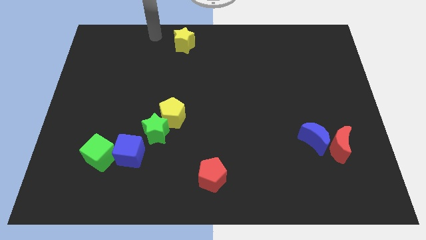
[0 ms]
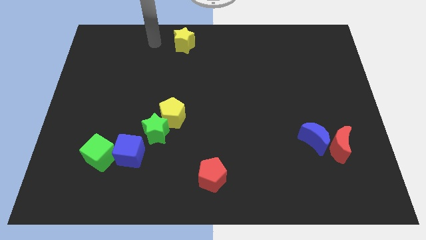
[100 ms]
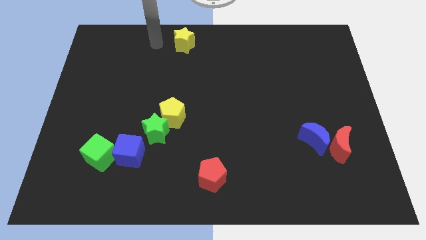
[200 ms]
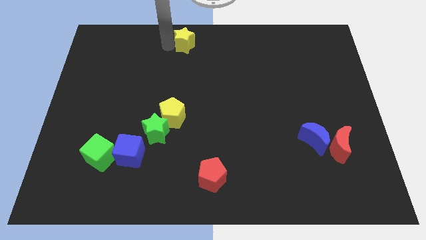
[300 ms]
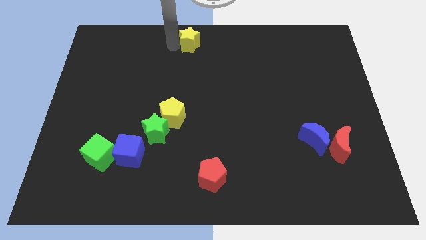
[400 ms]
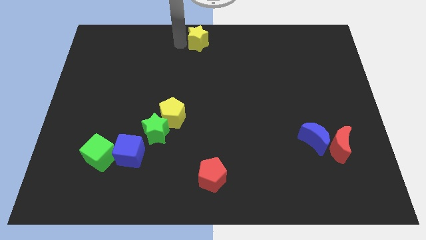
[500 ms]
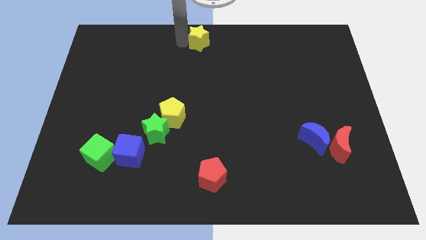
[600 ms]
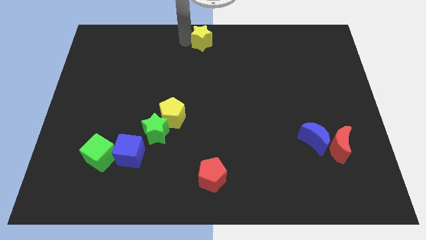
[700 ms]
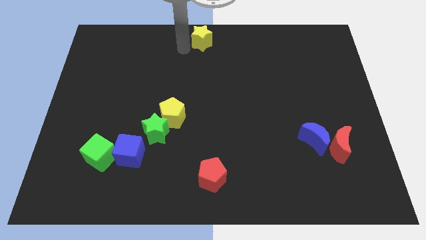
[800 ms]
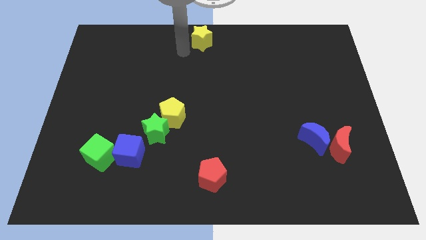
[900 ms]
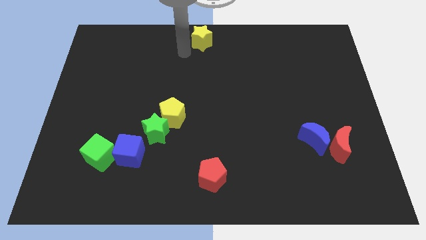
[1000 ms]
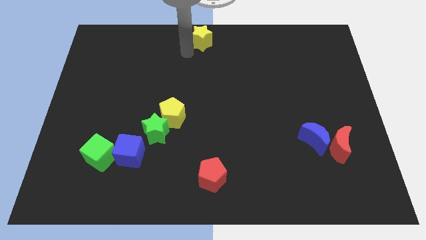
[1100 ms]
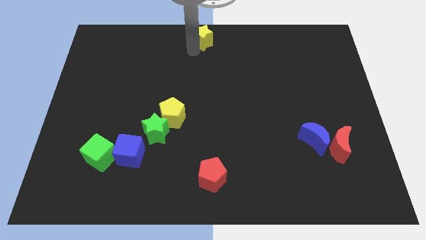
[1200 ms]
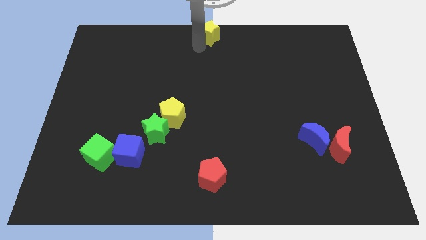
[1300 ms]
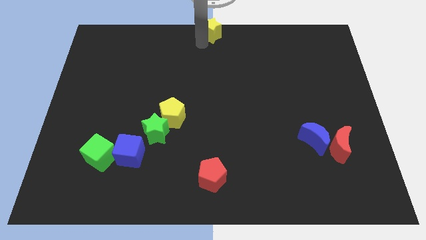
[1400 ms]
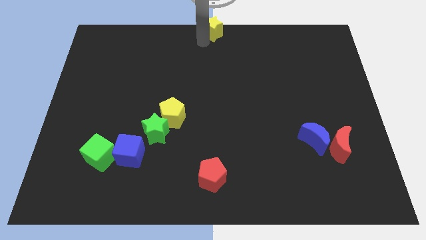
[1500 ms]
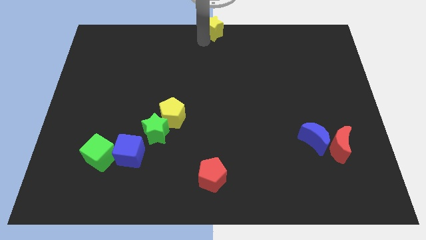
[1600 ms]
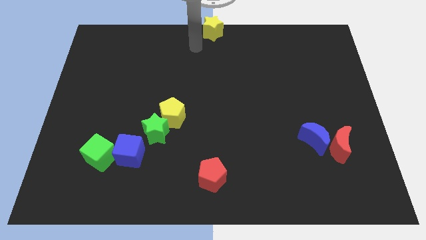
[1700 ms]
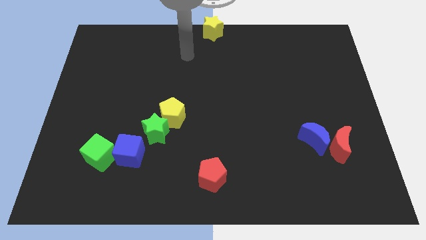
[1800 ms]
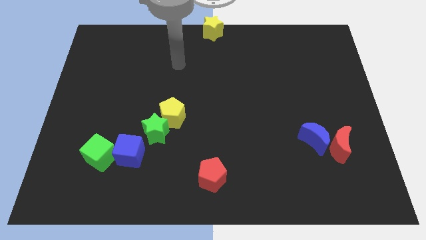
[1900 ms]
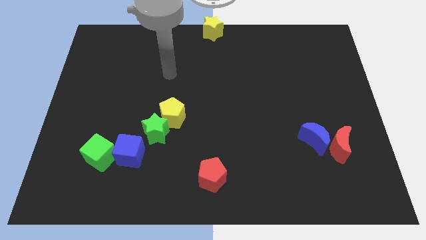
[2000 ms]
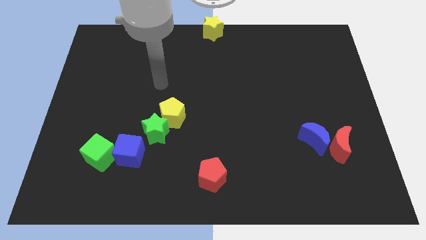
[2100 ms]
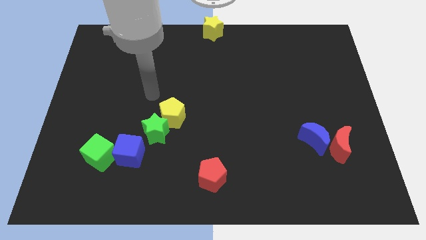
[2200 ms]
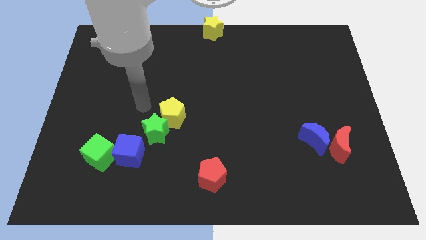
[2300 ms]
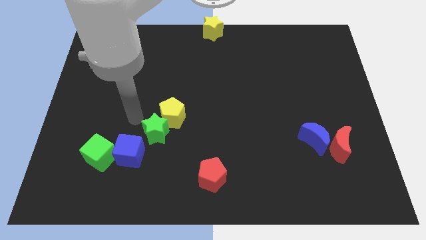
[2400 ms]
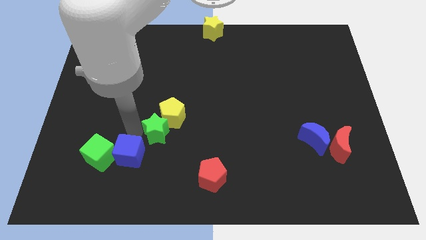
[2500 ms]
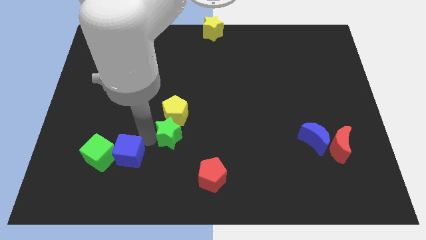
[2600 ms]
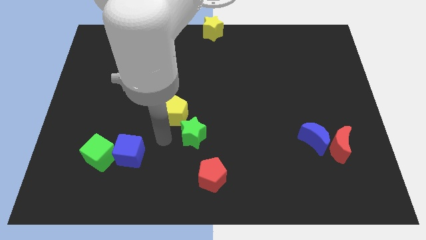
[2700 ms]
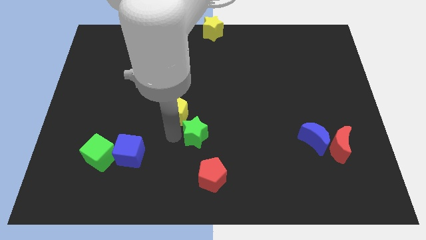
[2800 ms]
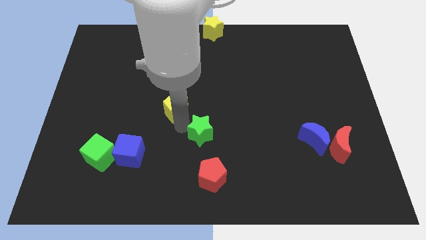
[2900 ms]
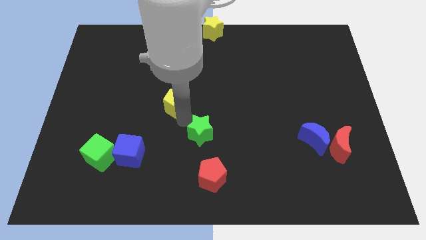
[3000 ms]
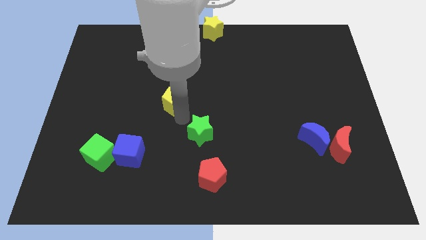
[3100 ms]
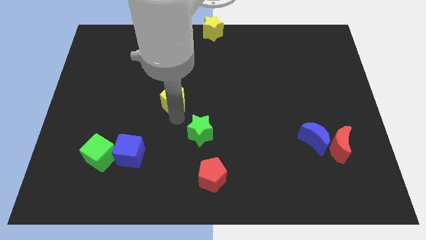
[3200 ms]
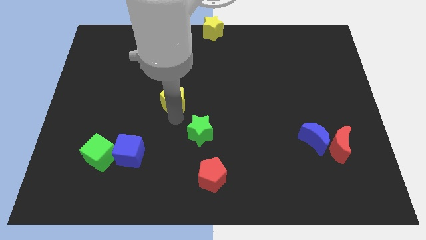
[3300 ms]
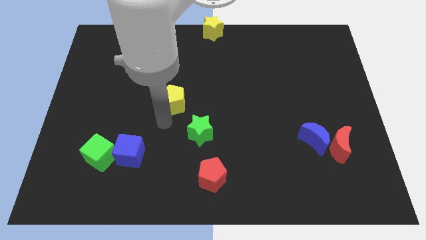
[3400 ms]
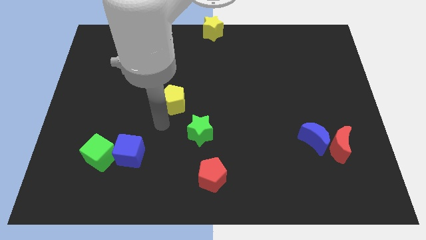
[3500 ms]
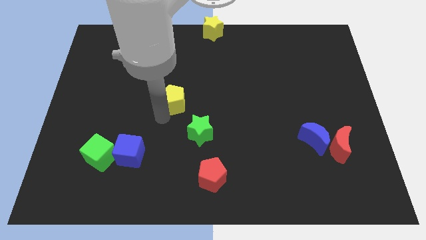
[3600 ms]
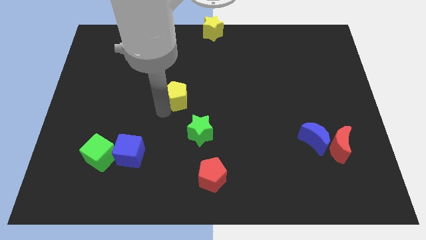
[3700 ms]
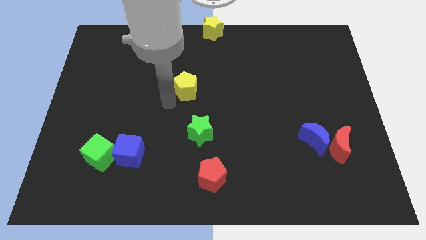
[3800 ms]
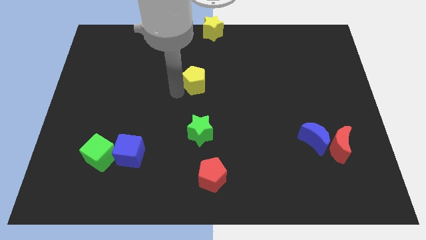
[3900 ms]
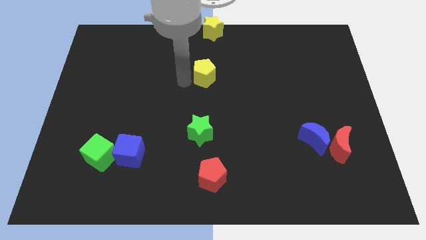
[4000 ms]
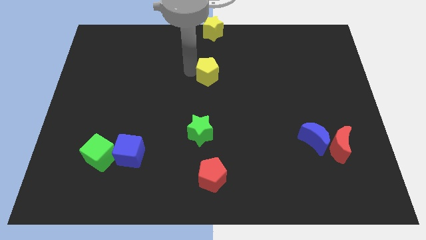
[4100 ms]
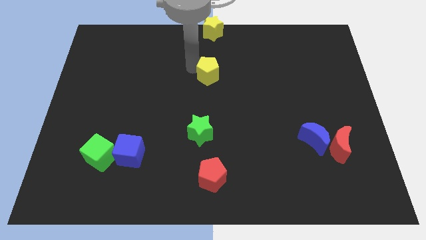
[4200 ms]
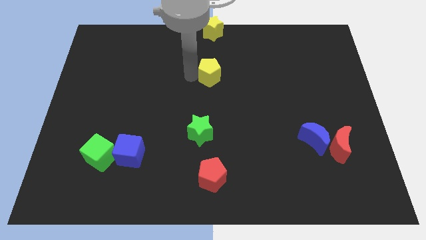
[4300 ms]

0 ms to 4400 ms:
put the yellow pentagon above the green star

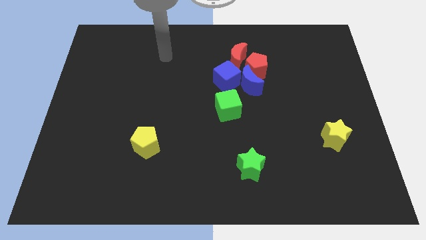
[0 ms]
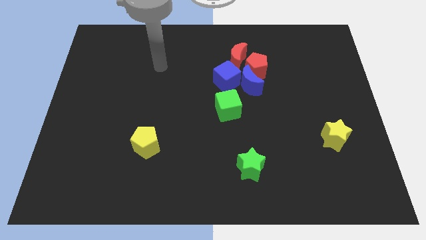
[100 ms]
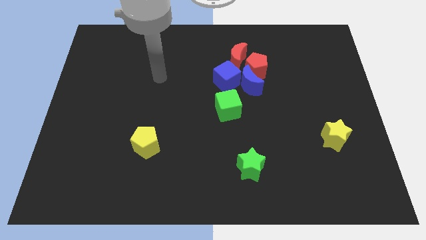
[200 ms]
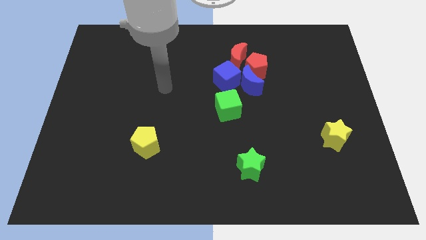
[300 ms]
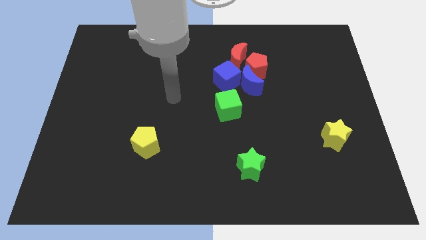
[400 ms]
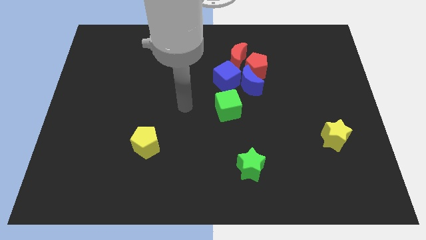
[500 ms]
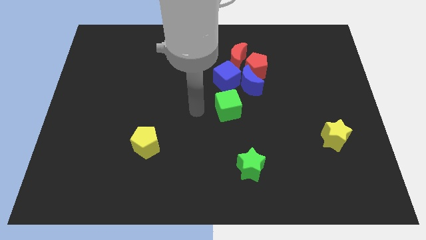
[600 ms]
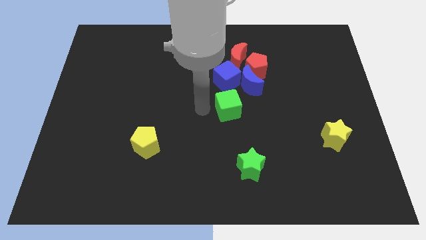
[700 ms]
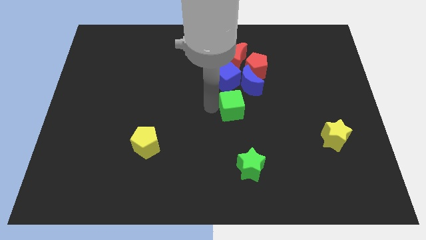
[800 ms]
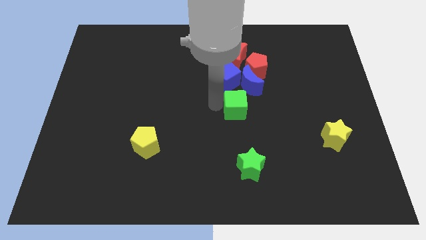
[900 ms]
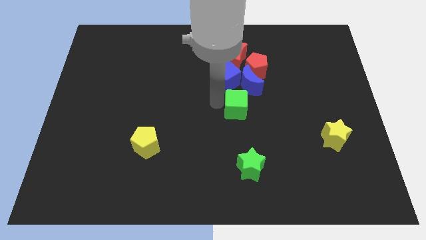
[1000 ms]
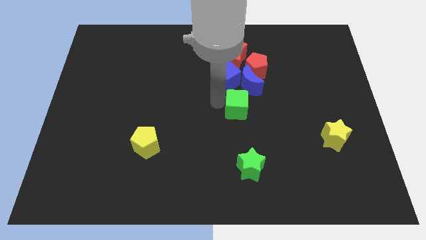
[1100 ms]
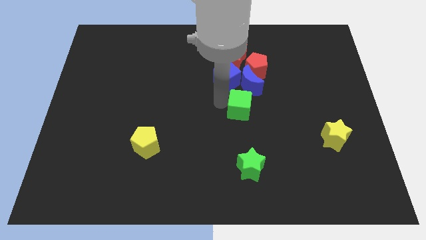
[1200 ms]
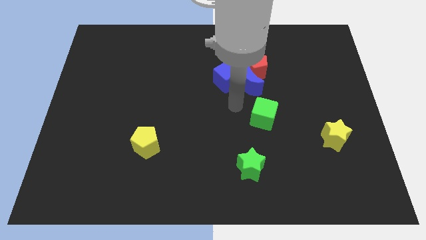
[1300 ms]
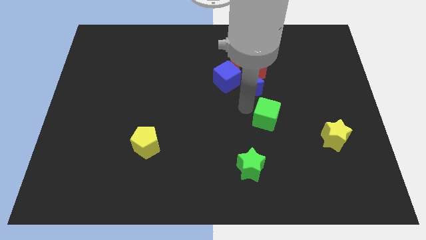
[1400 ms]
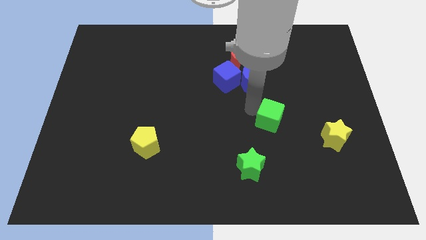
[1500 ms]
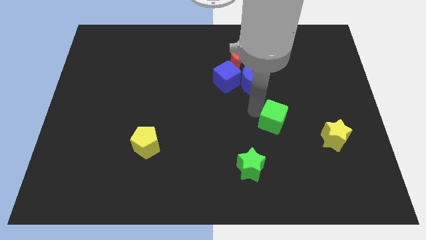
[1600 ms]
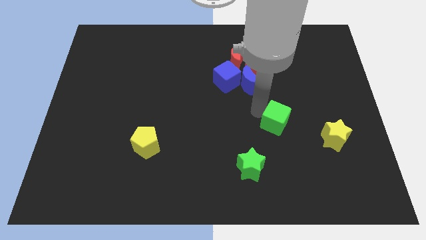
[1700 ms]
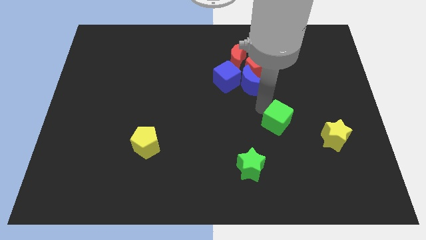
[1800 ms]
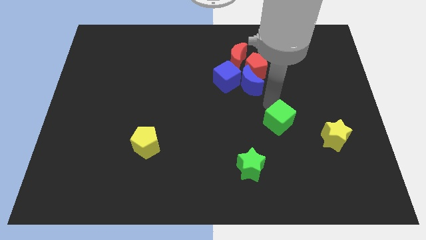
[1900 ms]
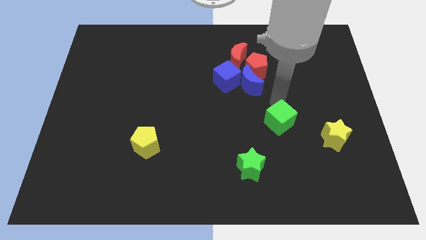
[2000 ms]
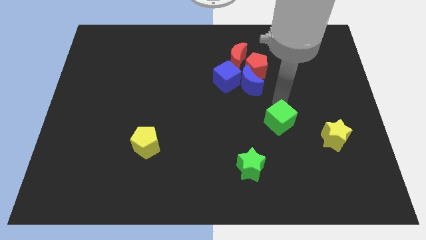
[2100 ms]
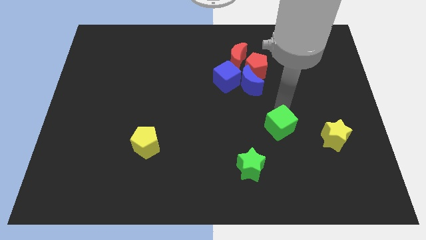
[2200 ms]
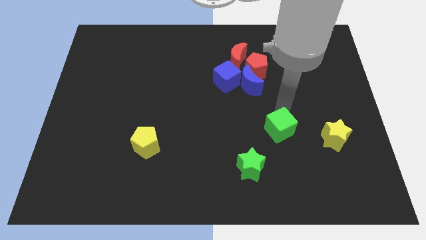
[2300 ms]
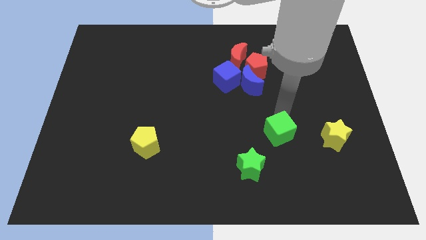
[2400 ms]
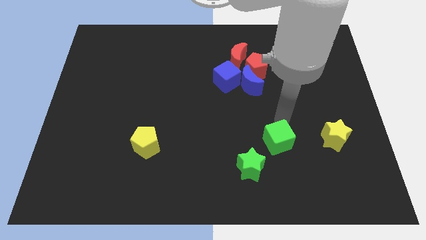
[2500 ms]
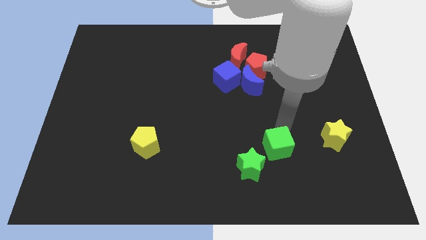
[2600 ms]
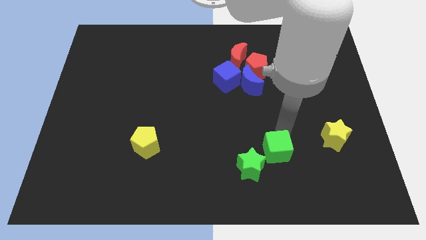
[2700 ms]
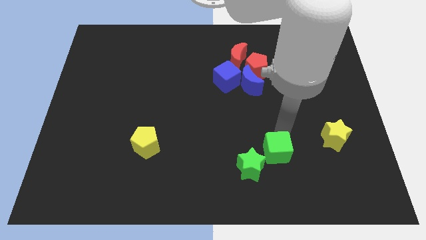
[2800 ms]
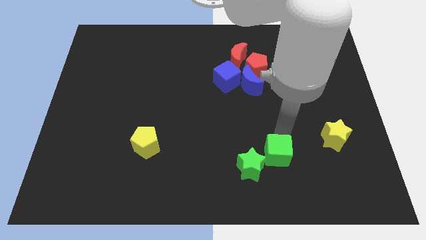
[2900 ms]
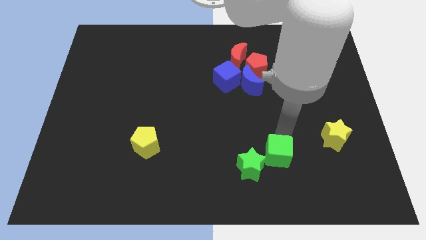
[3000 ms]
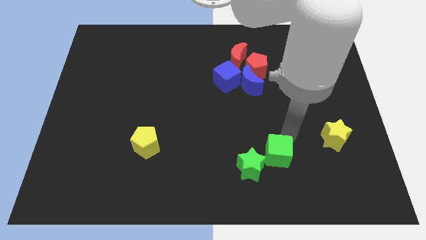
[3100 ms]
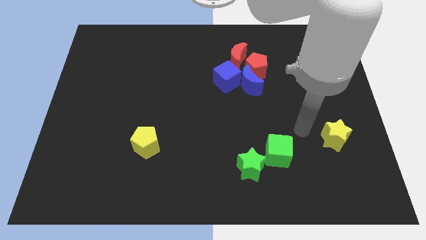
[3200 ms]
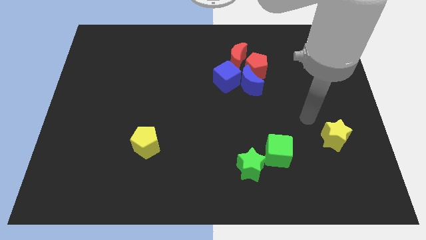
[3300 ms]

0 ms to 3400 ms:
place green cube in between the yellow star and green star

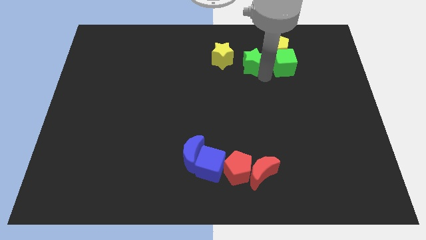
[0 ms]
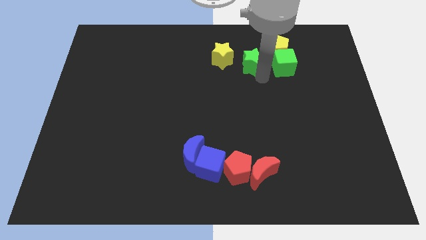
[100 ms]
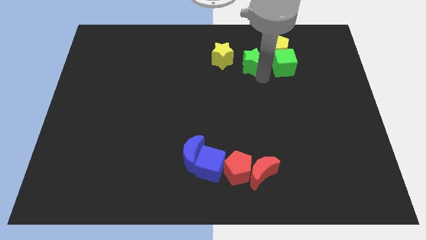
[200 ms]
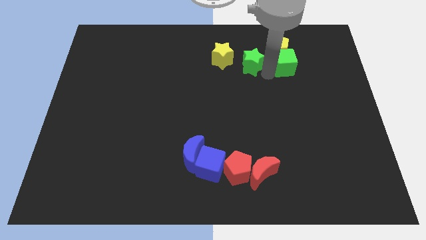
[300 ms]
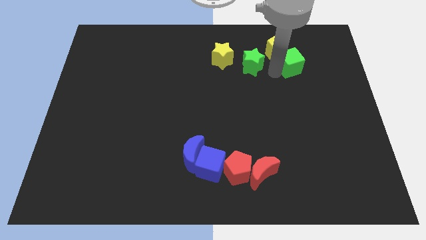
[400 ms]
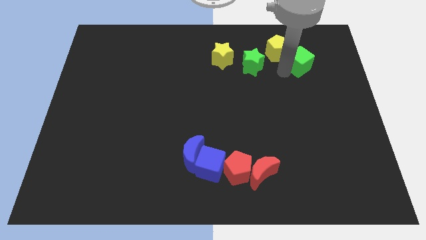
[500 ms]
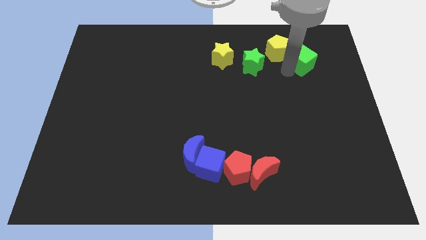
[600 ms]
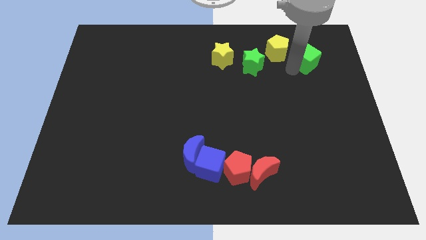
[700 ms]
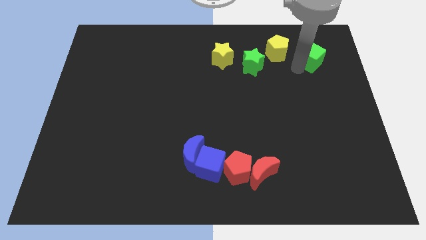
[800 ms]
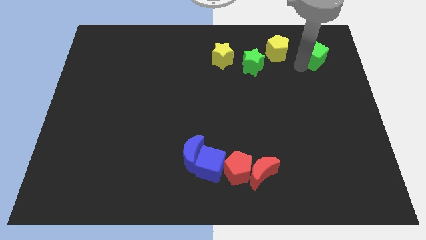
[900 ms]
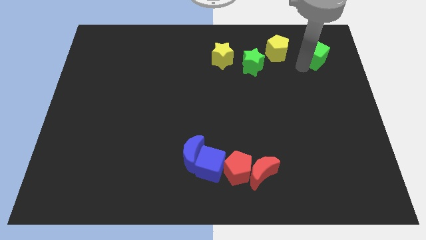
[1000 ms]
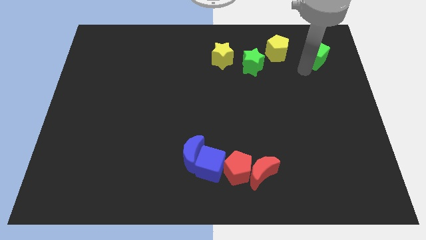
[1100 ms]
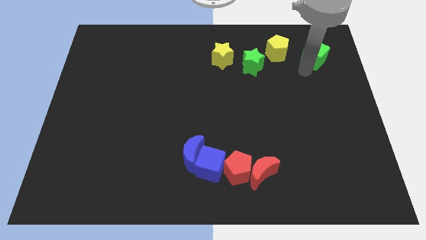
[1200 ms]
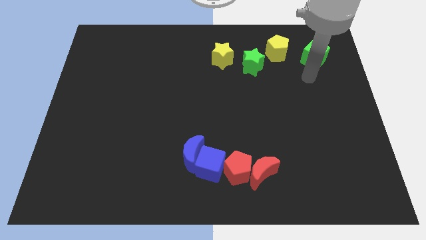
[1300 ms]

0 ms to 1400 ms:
separate the green cube from the yellow pentagon
